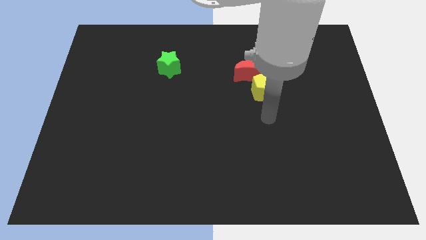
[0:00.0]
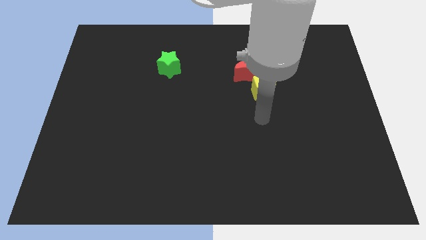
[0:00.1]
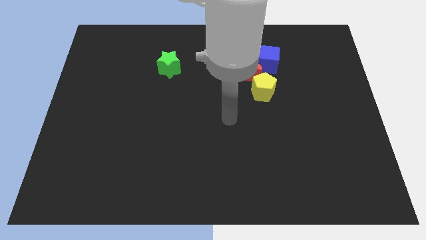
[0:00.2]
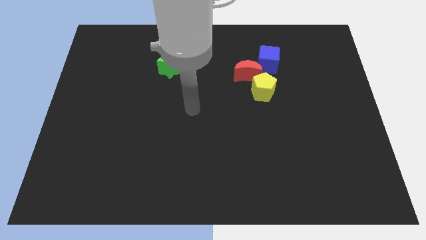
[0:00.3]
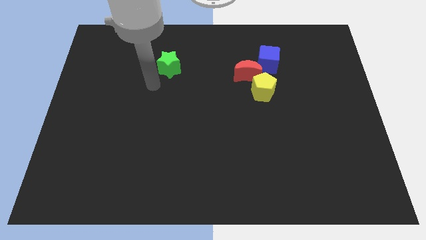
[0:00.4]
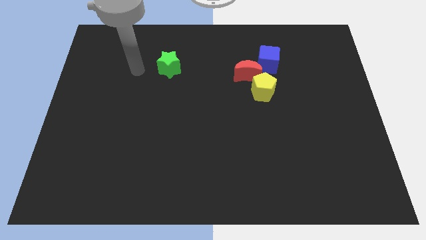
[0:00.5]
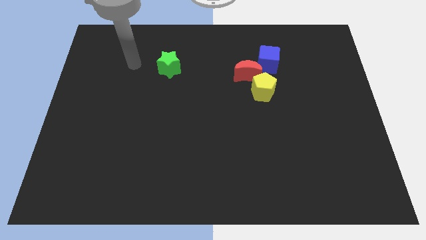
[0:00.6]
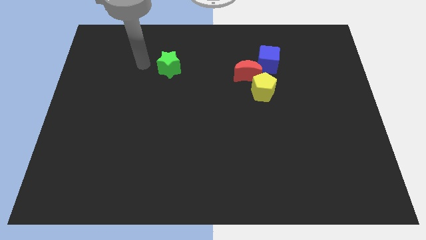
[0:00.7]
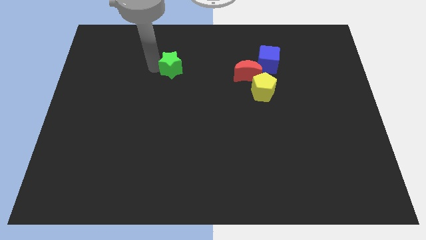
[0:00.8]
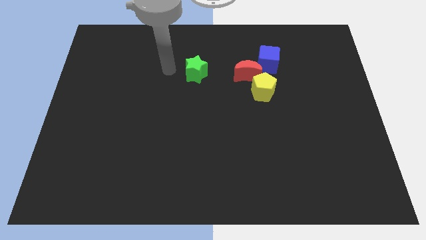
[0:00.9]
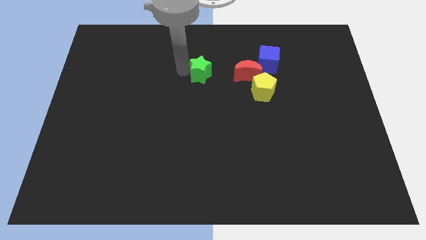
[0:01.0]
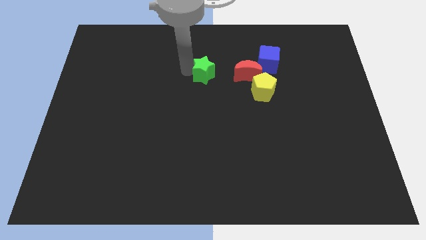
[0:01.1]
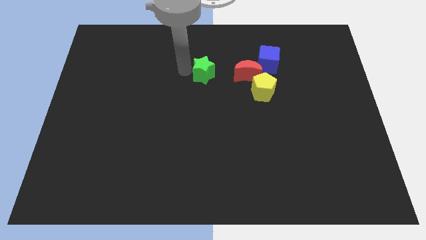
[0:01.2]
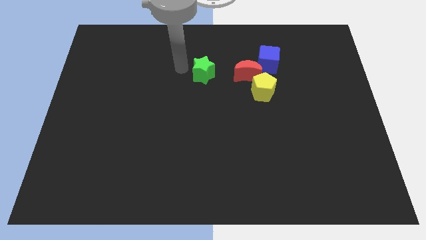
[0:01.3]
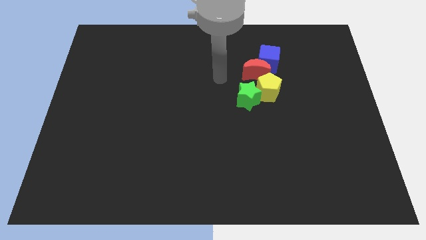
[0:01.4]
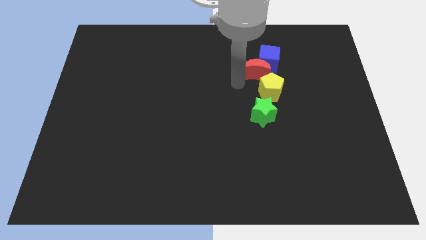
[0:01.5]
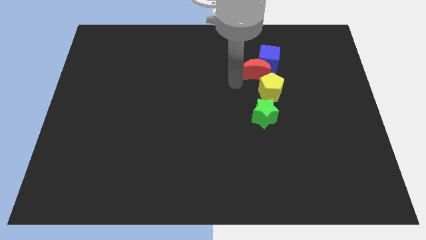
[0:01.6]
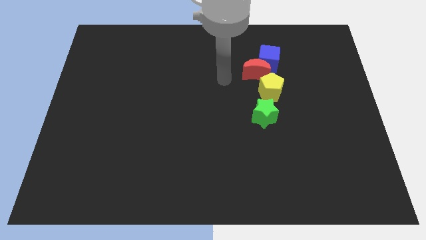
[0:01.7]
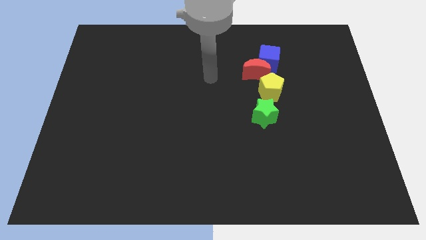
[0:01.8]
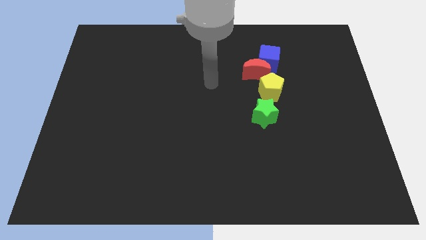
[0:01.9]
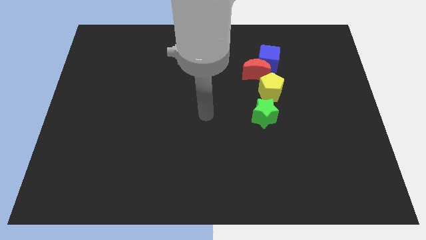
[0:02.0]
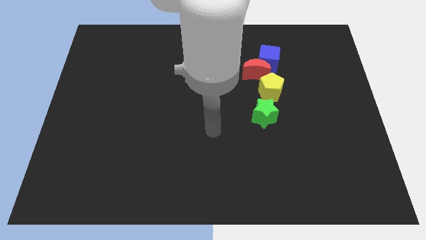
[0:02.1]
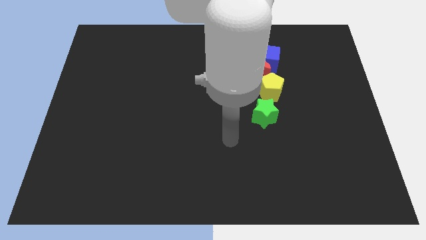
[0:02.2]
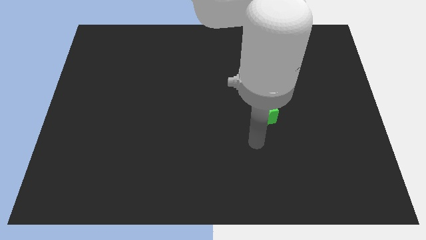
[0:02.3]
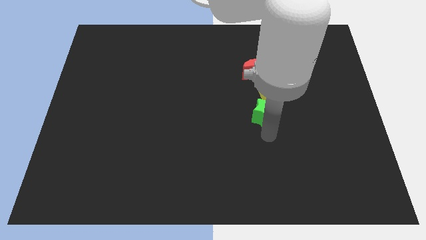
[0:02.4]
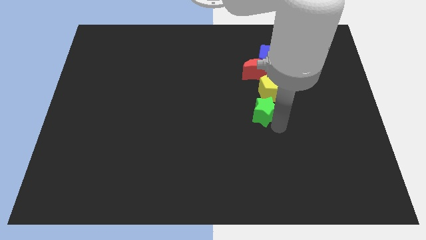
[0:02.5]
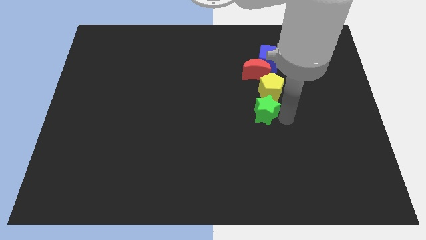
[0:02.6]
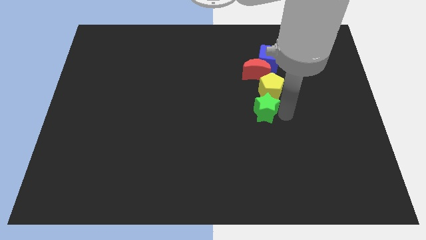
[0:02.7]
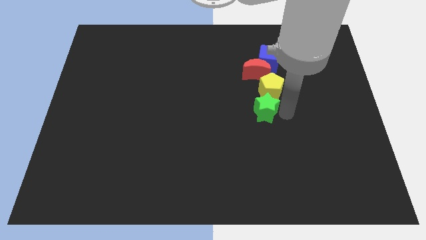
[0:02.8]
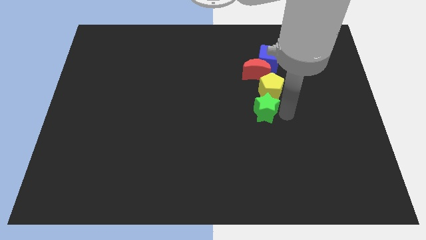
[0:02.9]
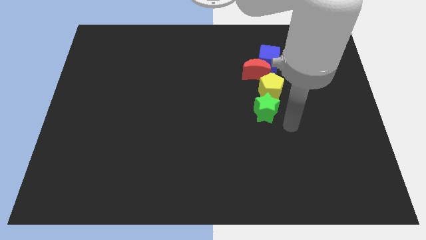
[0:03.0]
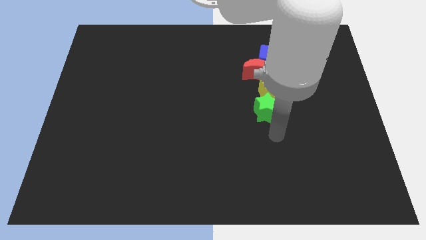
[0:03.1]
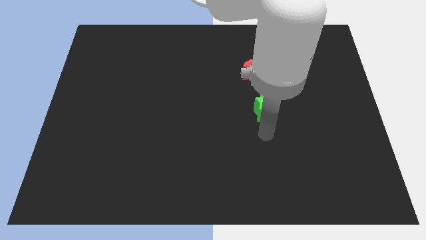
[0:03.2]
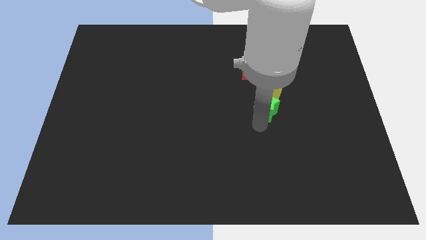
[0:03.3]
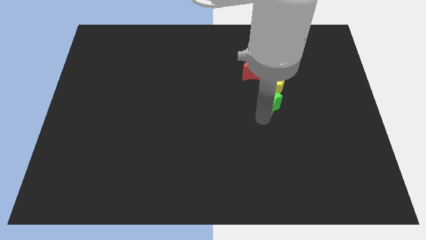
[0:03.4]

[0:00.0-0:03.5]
move the star towards the pentagon

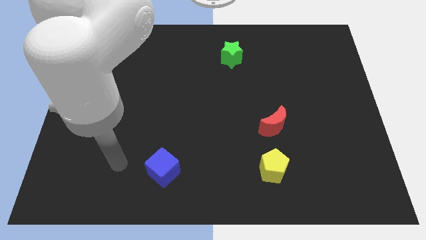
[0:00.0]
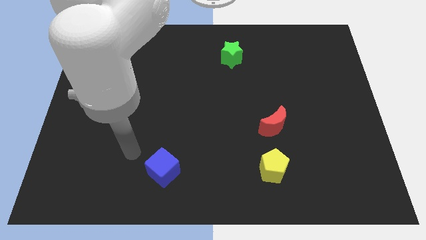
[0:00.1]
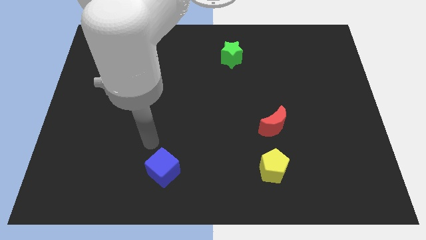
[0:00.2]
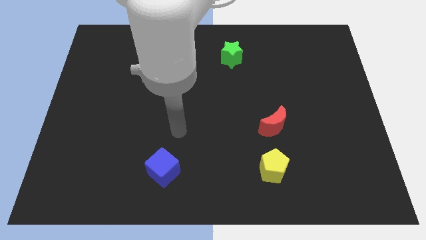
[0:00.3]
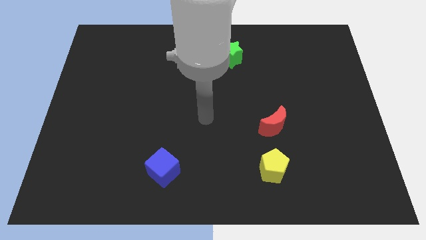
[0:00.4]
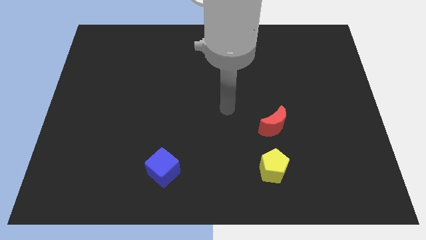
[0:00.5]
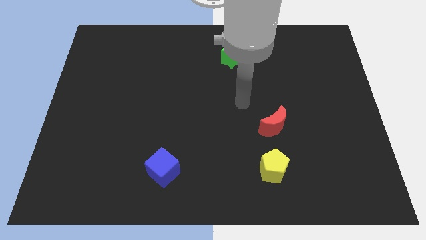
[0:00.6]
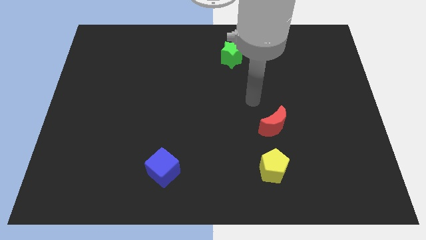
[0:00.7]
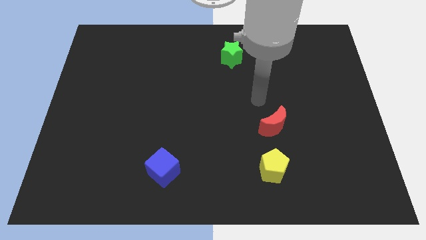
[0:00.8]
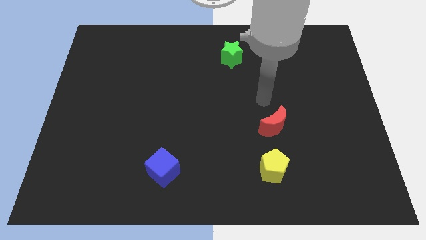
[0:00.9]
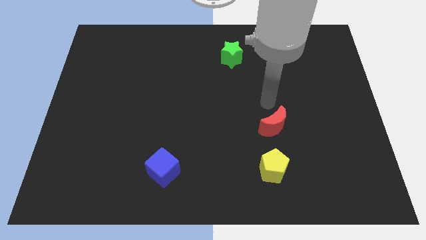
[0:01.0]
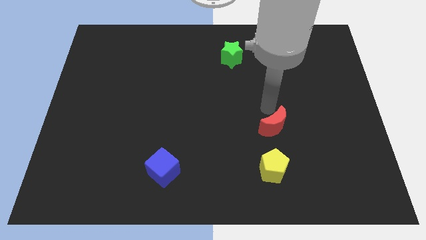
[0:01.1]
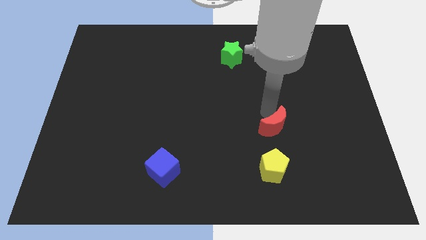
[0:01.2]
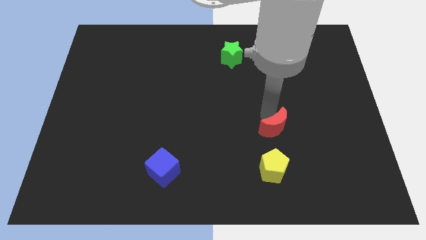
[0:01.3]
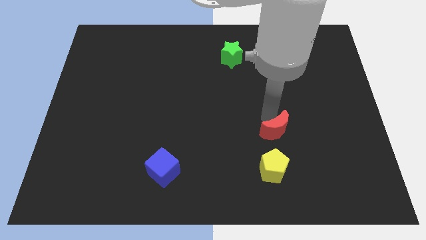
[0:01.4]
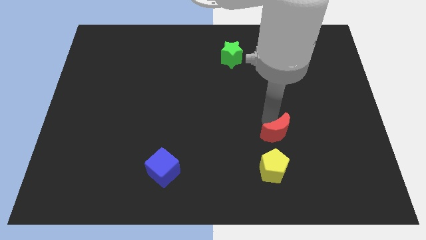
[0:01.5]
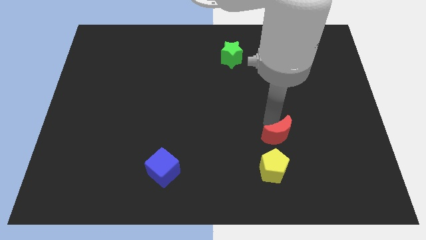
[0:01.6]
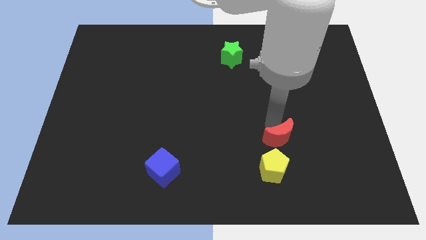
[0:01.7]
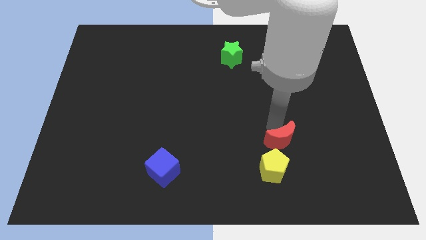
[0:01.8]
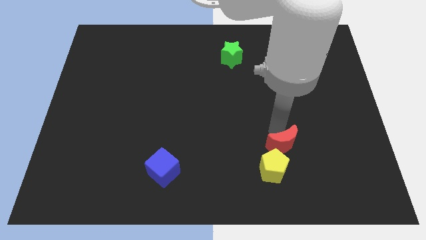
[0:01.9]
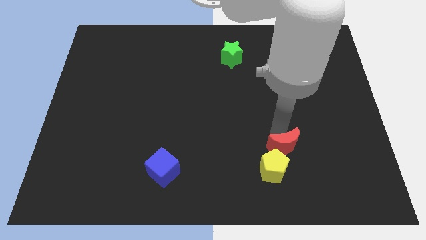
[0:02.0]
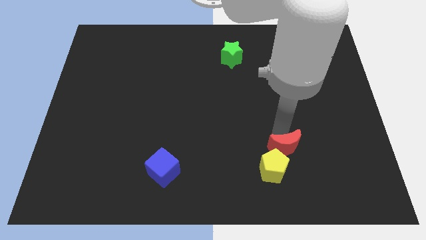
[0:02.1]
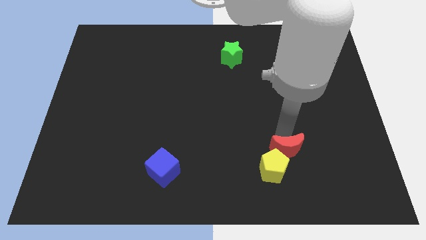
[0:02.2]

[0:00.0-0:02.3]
push the red block next to the yellow pentagon

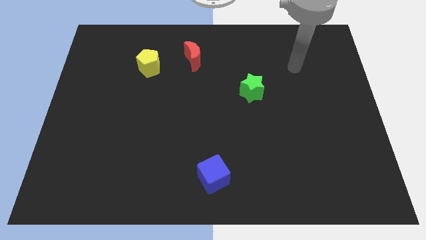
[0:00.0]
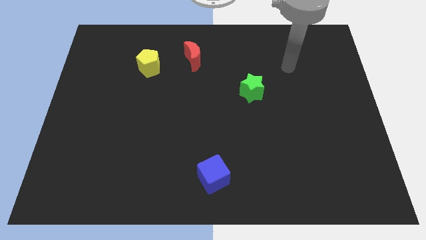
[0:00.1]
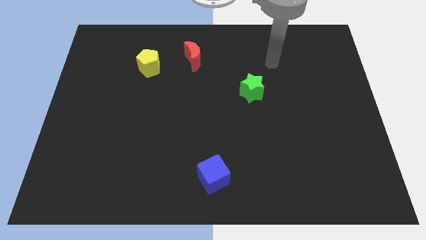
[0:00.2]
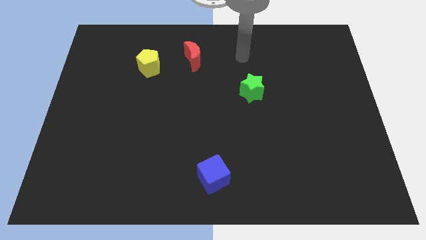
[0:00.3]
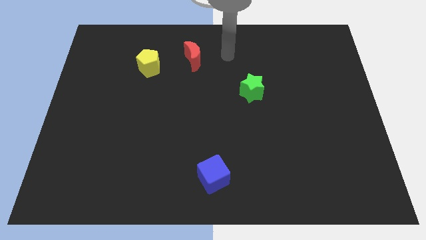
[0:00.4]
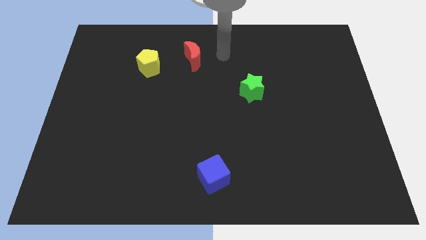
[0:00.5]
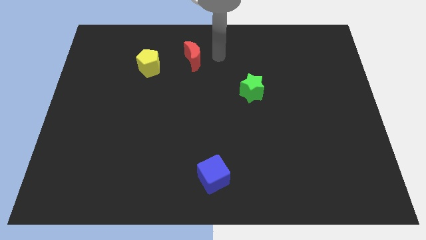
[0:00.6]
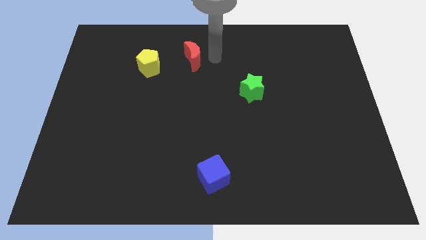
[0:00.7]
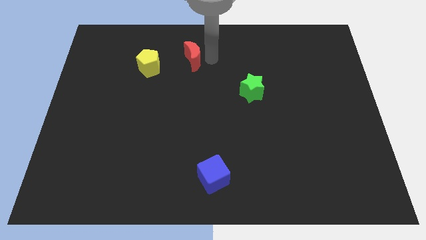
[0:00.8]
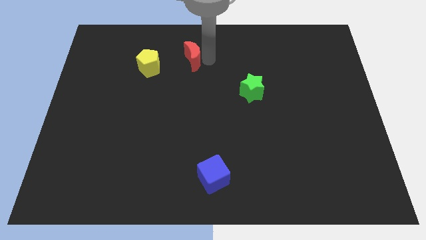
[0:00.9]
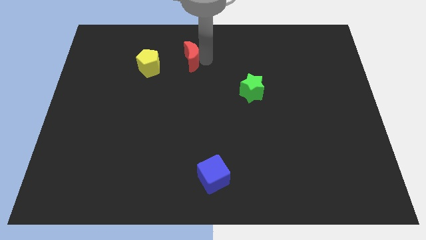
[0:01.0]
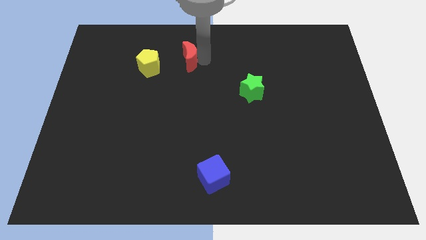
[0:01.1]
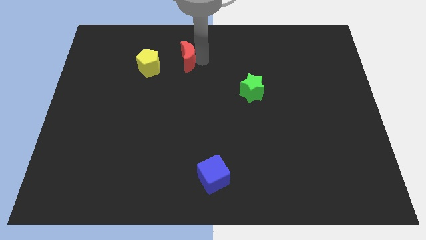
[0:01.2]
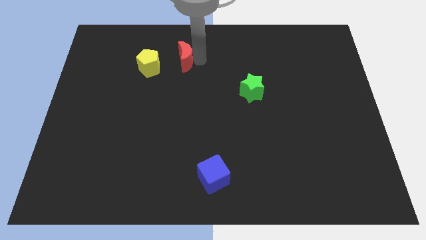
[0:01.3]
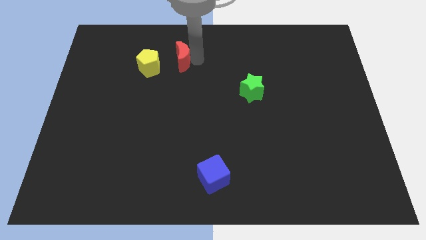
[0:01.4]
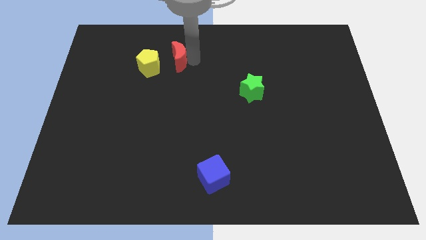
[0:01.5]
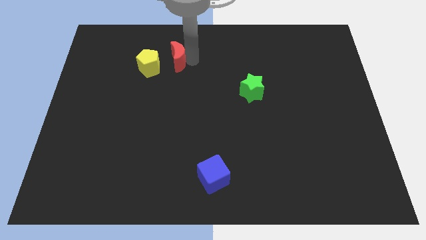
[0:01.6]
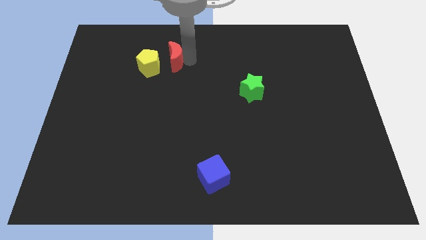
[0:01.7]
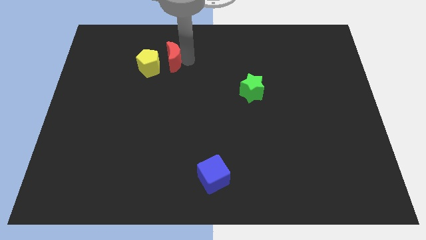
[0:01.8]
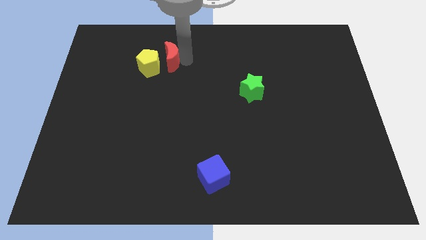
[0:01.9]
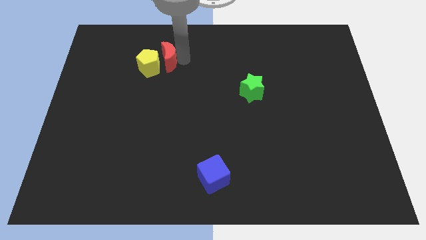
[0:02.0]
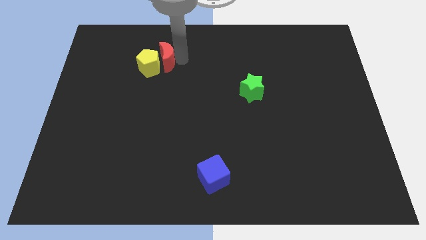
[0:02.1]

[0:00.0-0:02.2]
slide the red block towards the yellow pentagon
